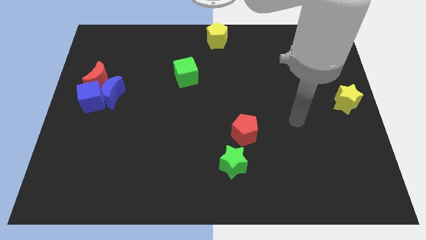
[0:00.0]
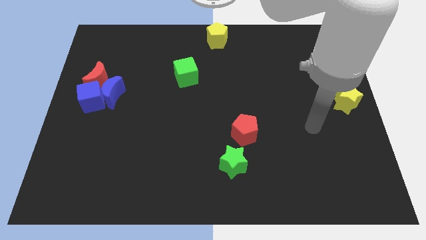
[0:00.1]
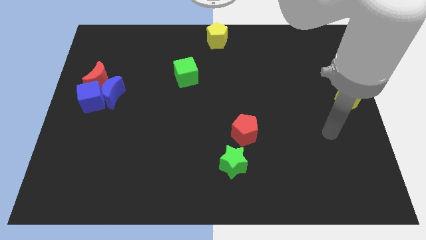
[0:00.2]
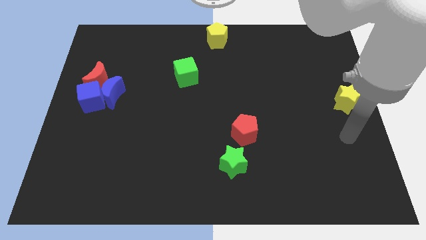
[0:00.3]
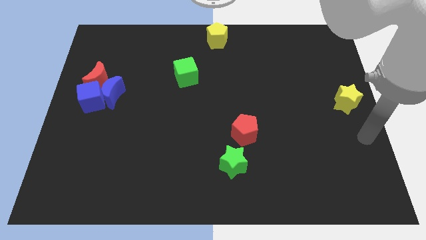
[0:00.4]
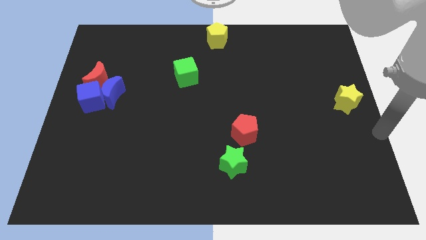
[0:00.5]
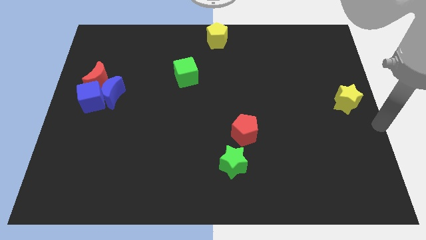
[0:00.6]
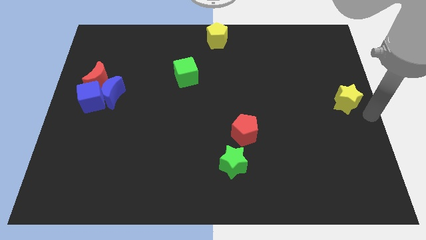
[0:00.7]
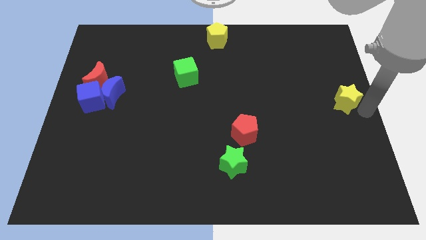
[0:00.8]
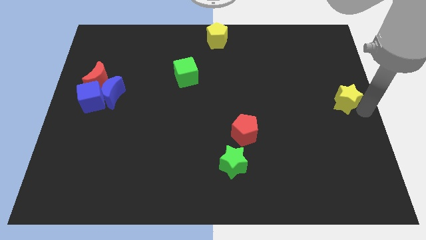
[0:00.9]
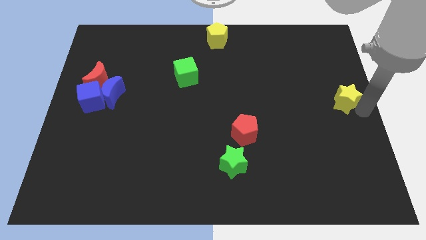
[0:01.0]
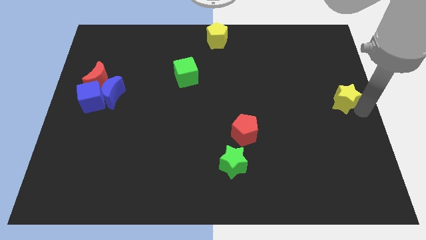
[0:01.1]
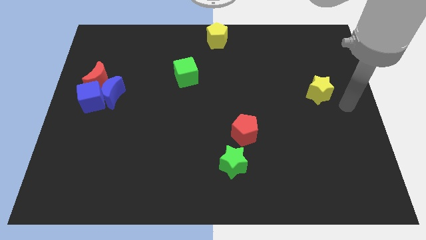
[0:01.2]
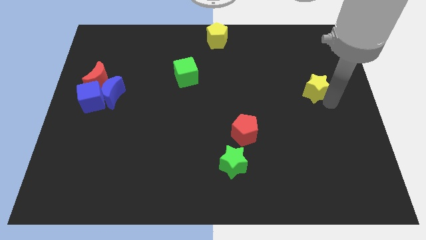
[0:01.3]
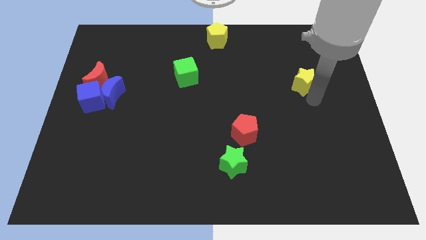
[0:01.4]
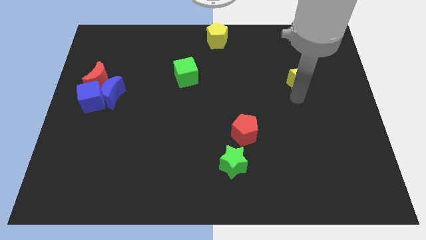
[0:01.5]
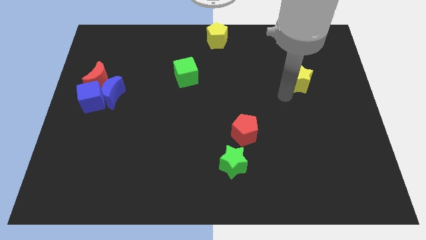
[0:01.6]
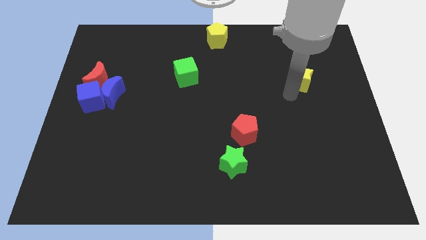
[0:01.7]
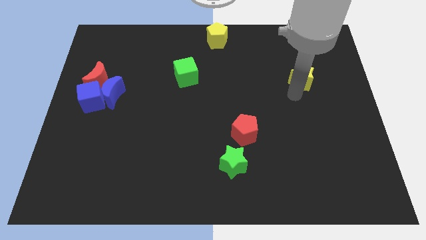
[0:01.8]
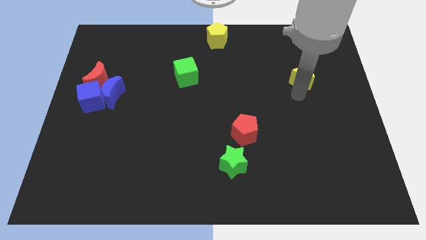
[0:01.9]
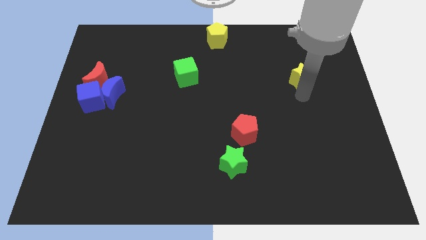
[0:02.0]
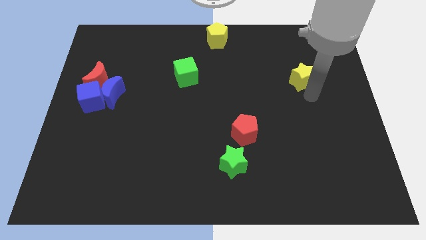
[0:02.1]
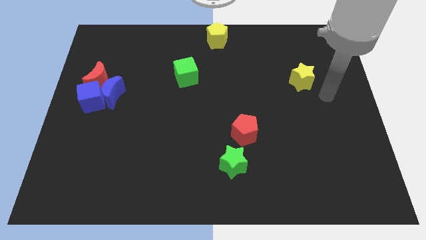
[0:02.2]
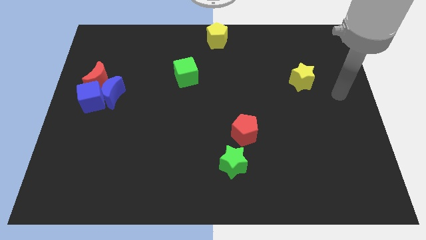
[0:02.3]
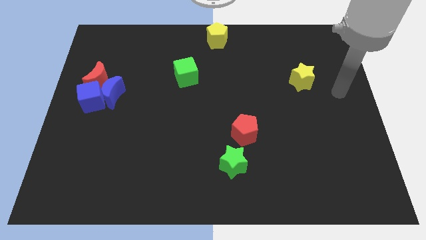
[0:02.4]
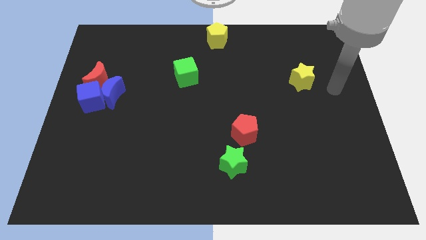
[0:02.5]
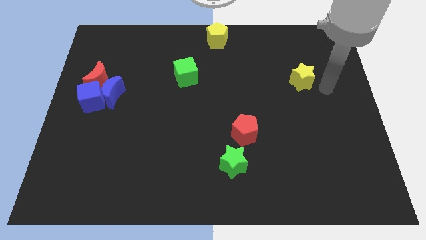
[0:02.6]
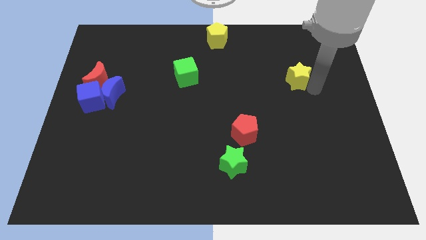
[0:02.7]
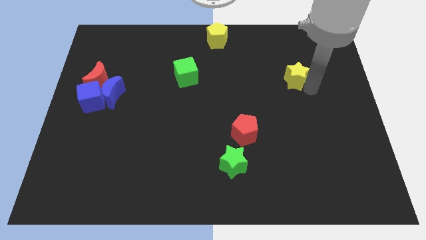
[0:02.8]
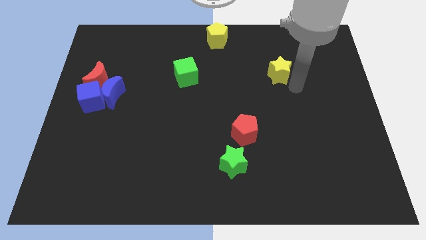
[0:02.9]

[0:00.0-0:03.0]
place the yellow star parallel to green cube

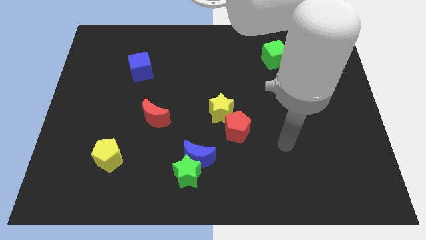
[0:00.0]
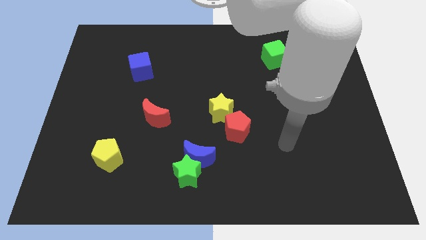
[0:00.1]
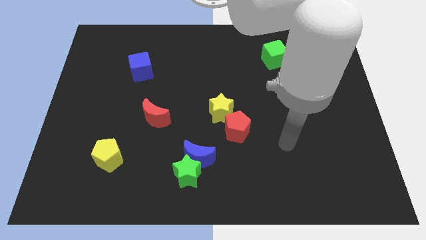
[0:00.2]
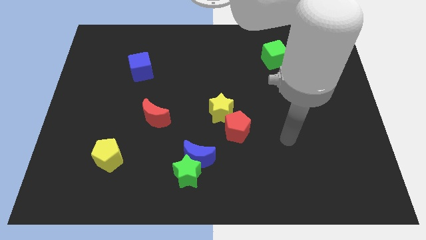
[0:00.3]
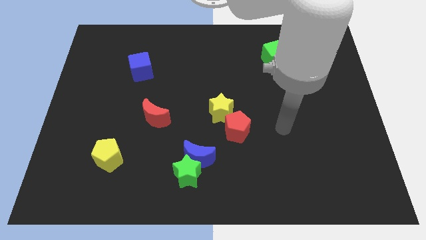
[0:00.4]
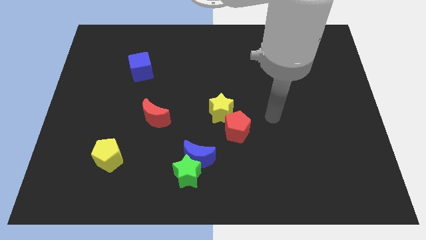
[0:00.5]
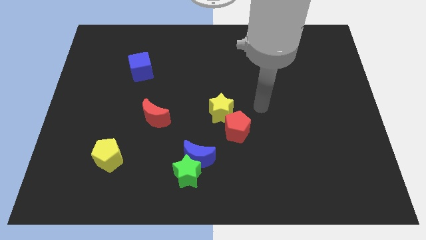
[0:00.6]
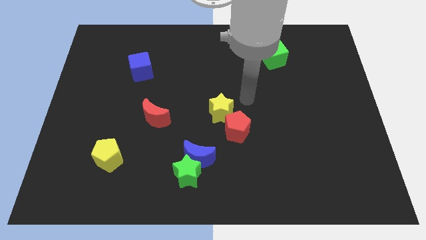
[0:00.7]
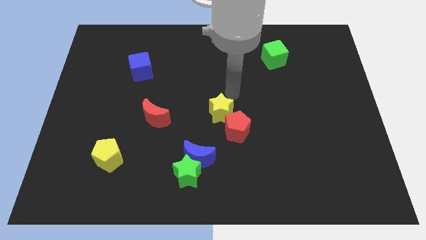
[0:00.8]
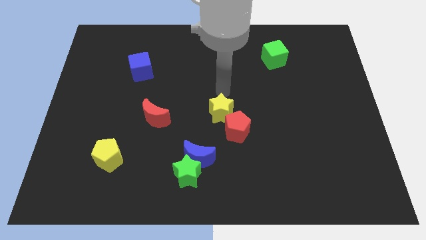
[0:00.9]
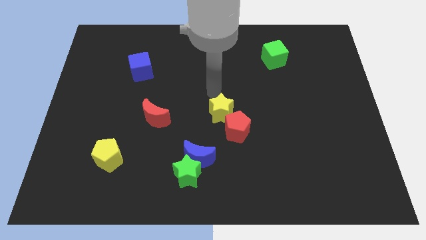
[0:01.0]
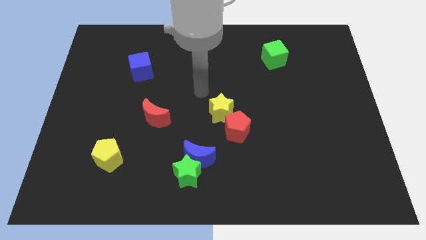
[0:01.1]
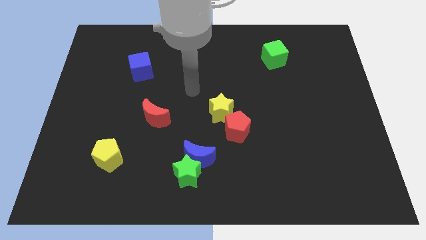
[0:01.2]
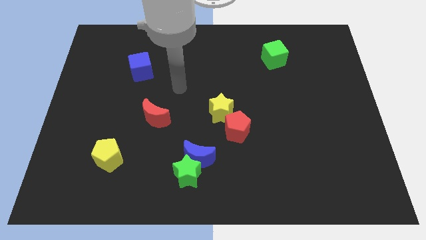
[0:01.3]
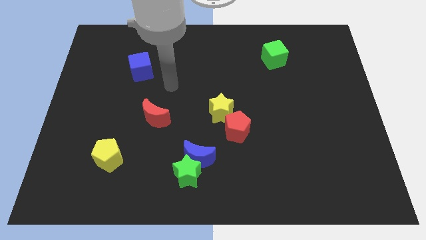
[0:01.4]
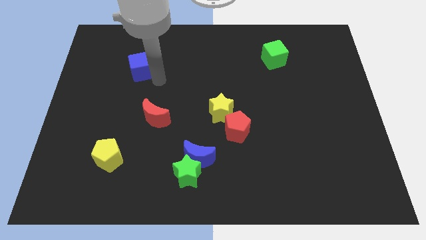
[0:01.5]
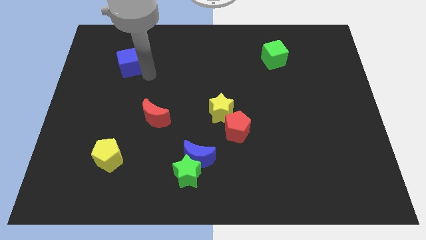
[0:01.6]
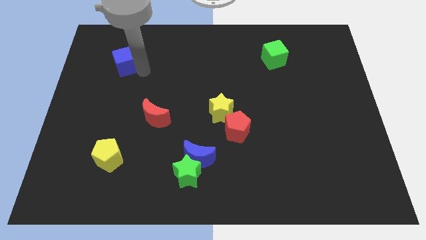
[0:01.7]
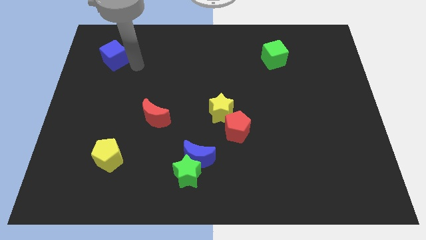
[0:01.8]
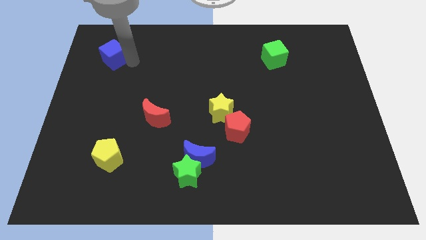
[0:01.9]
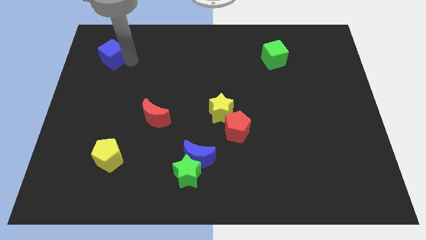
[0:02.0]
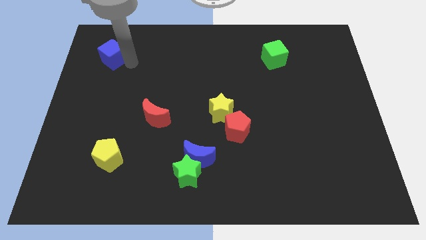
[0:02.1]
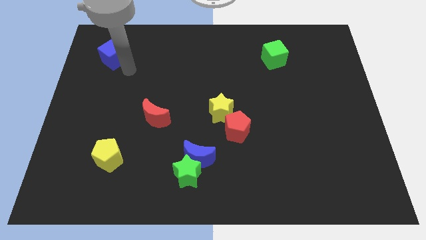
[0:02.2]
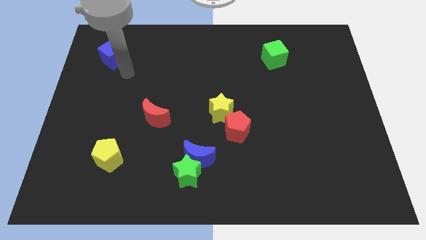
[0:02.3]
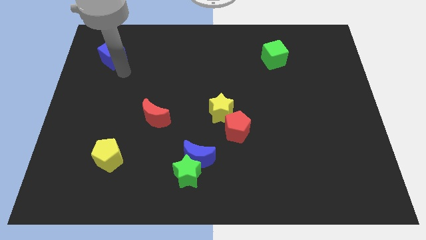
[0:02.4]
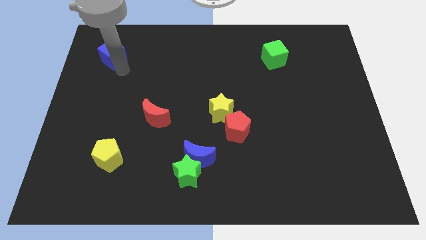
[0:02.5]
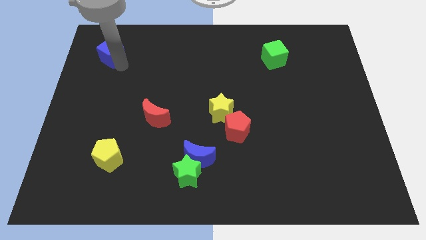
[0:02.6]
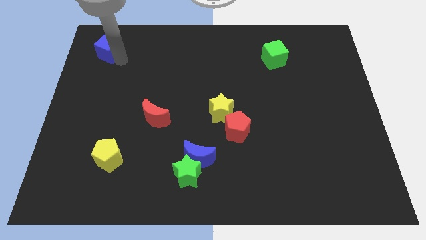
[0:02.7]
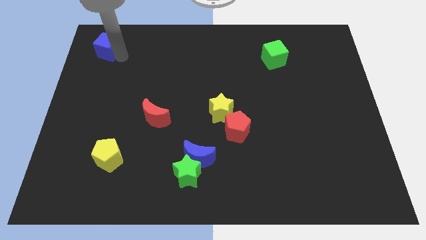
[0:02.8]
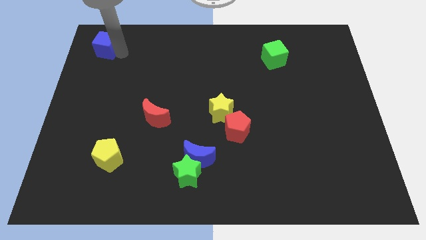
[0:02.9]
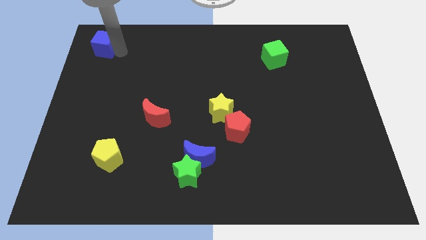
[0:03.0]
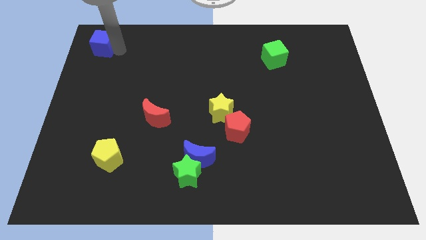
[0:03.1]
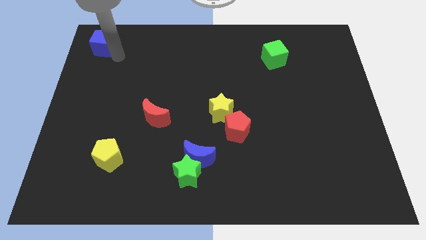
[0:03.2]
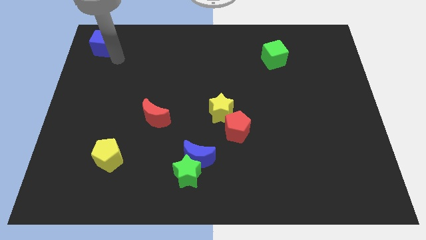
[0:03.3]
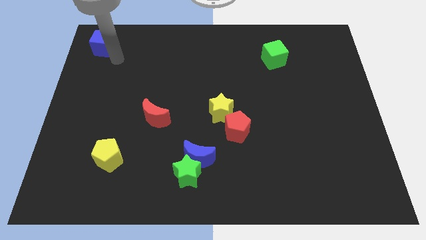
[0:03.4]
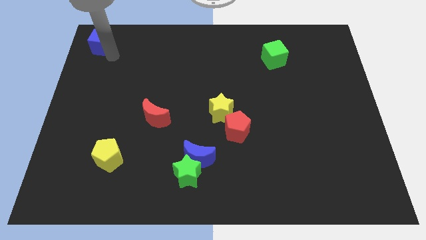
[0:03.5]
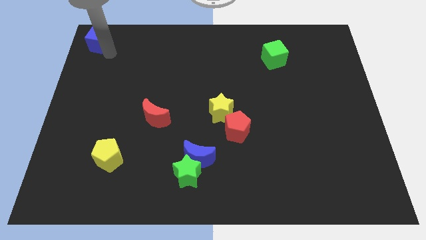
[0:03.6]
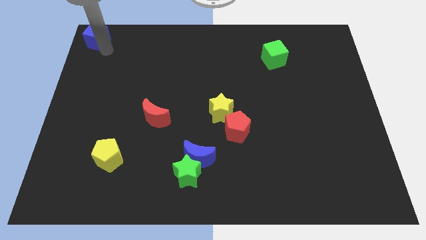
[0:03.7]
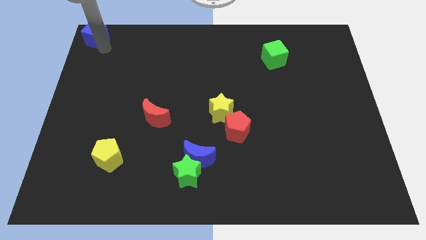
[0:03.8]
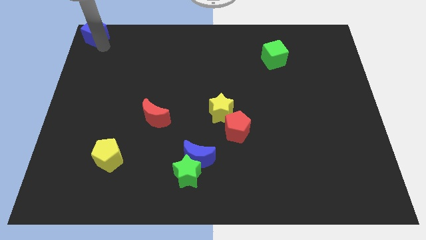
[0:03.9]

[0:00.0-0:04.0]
push blue moon towards top left side of the board

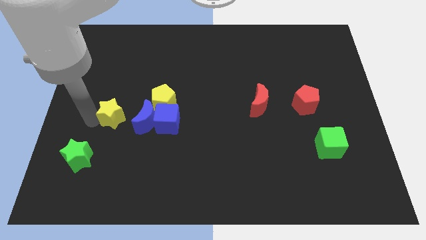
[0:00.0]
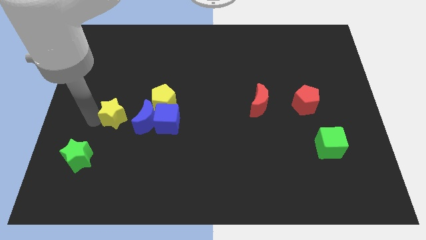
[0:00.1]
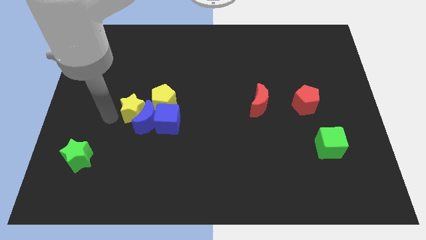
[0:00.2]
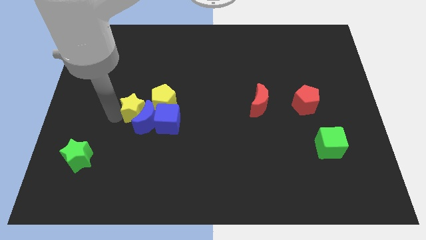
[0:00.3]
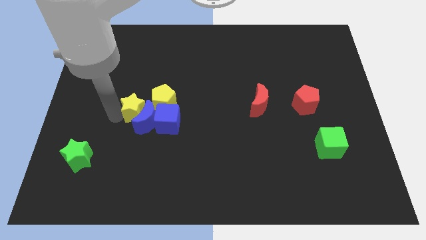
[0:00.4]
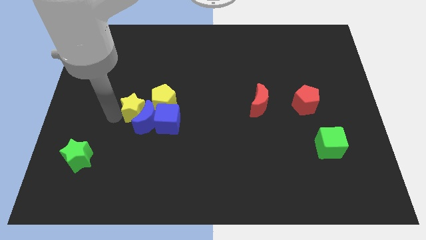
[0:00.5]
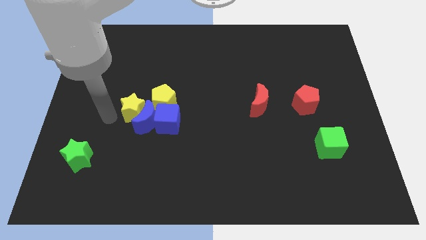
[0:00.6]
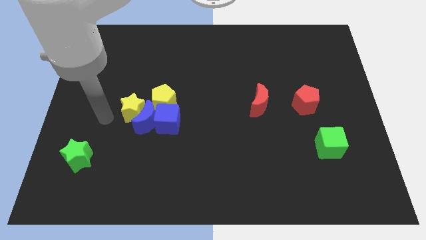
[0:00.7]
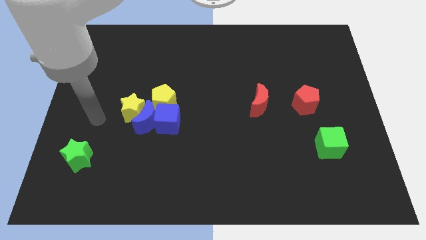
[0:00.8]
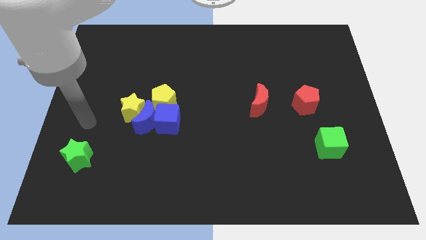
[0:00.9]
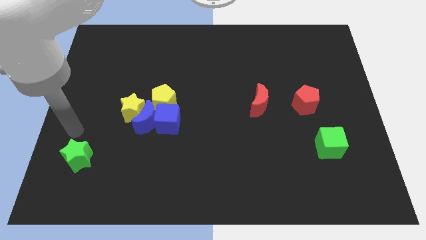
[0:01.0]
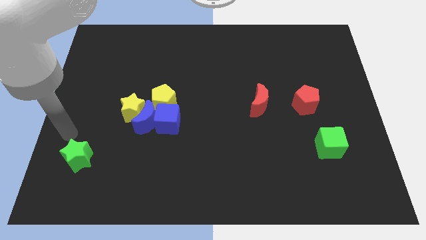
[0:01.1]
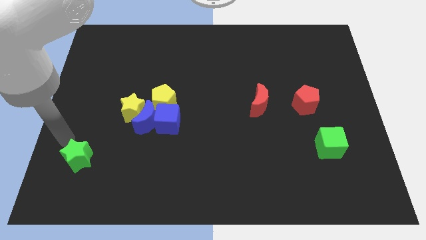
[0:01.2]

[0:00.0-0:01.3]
push the yellow star to the left of the blue crescent

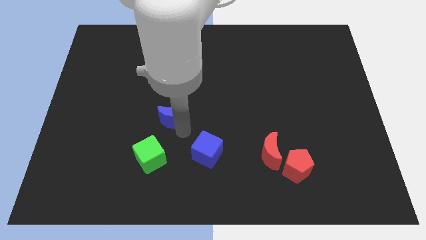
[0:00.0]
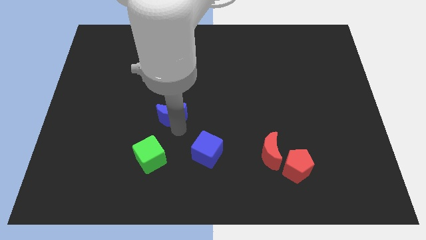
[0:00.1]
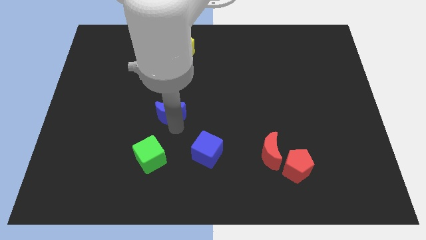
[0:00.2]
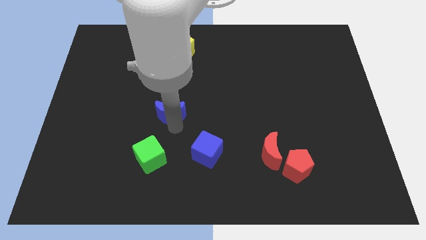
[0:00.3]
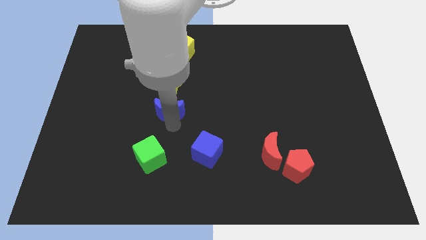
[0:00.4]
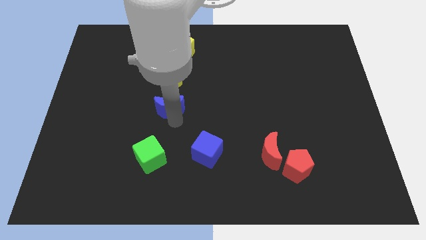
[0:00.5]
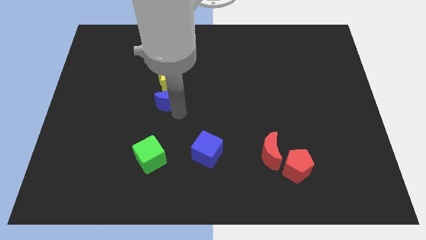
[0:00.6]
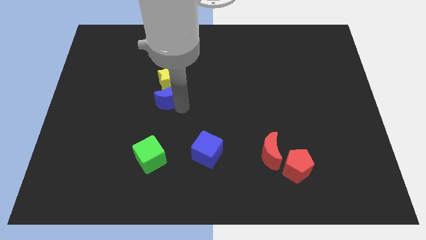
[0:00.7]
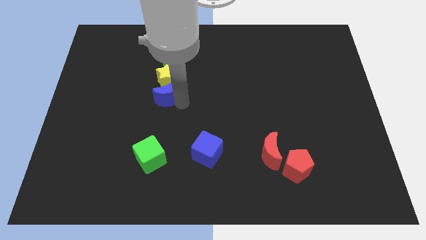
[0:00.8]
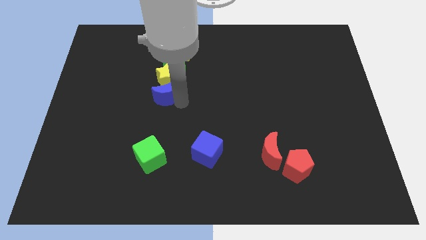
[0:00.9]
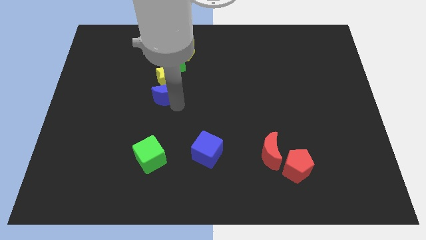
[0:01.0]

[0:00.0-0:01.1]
push blue moon towards yellow star
